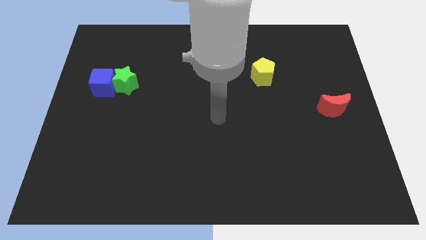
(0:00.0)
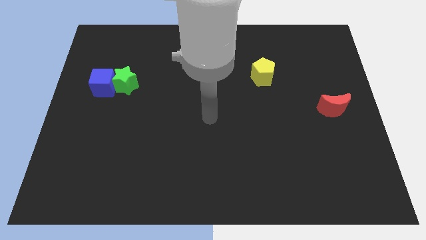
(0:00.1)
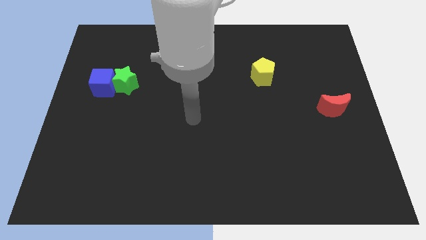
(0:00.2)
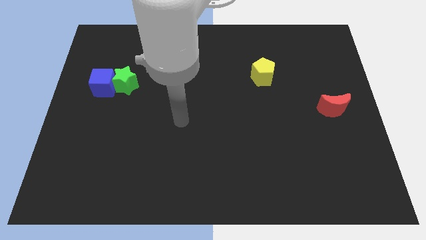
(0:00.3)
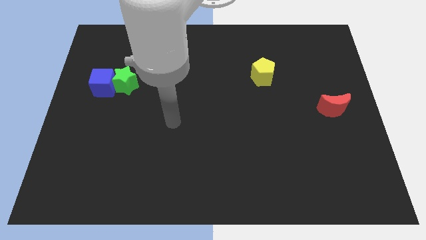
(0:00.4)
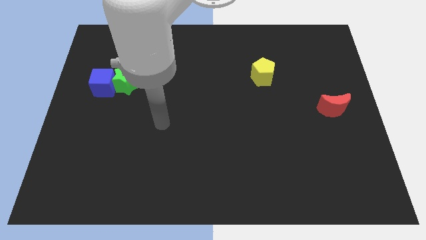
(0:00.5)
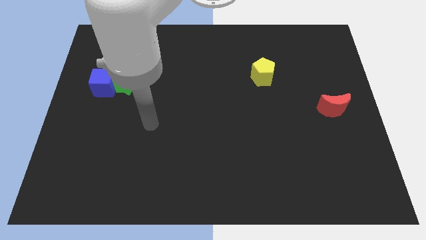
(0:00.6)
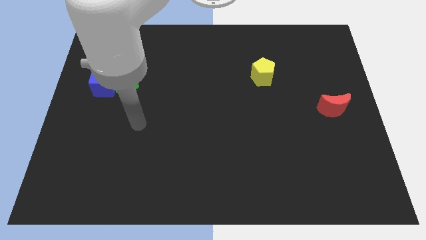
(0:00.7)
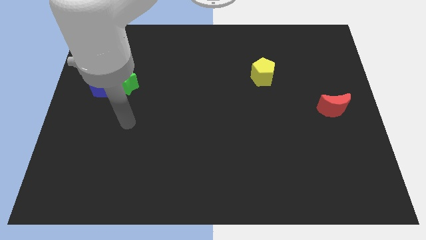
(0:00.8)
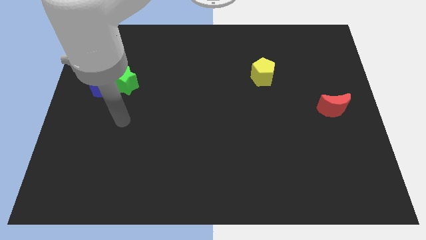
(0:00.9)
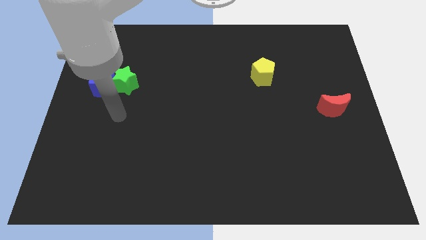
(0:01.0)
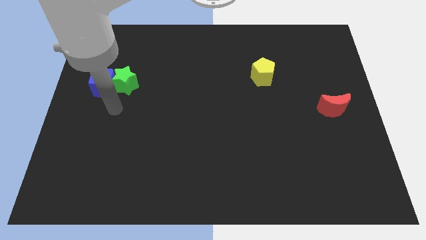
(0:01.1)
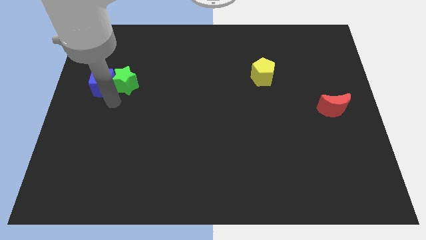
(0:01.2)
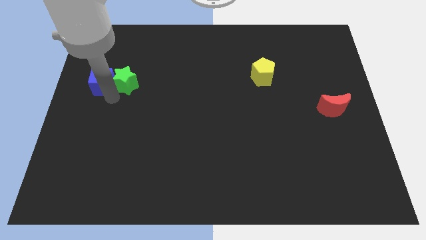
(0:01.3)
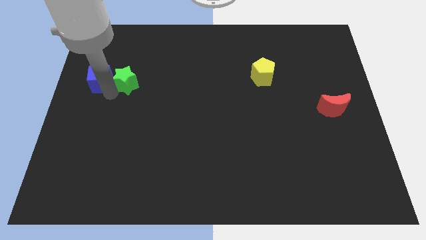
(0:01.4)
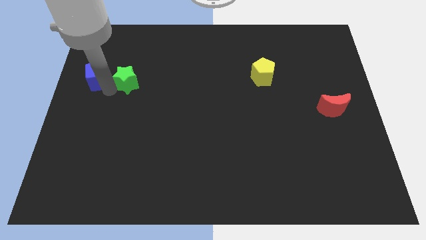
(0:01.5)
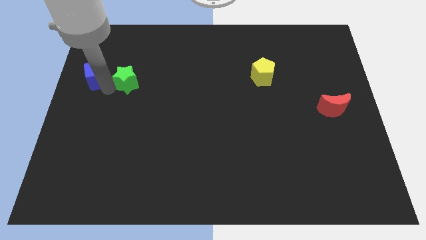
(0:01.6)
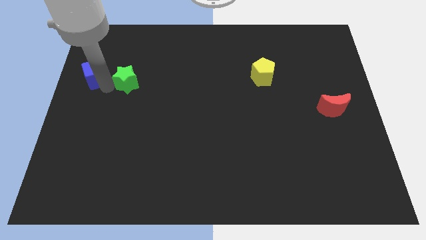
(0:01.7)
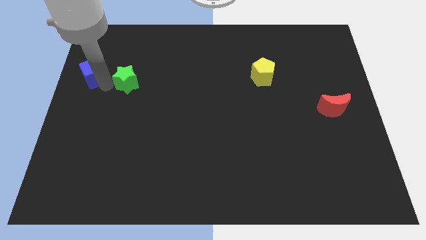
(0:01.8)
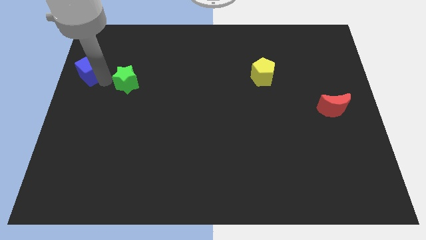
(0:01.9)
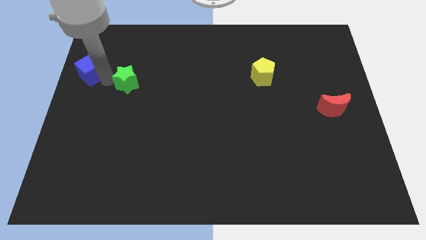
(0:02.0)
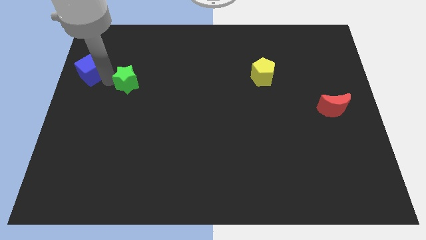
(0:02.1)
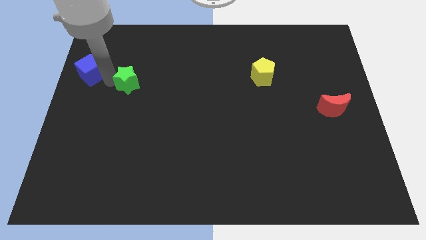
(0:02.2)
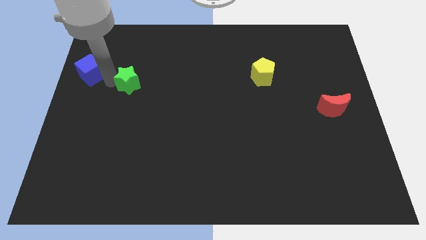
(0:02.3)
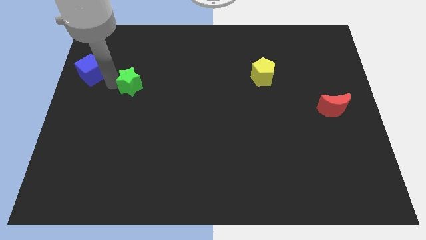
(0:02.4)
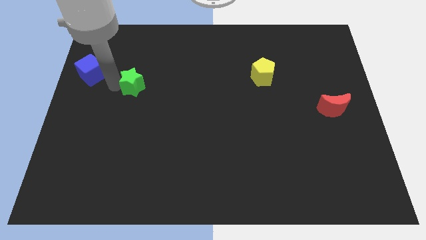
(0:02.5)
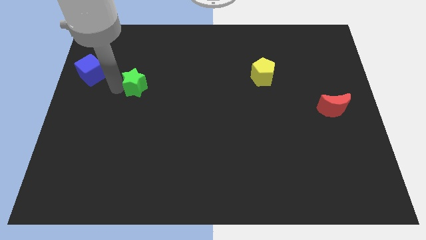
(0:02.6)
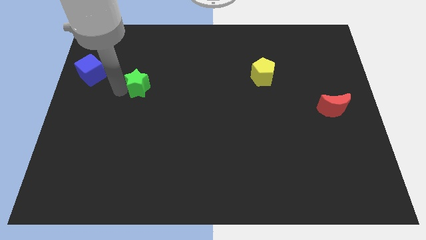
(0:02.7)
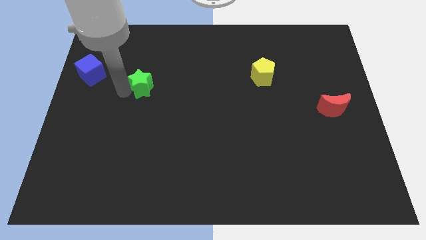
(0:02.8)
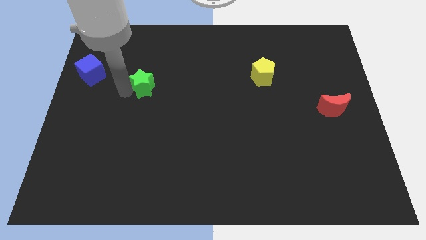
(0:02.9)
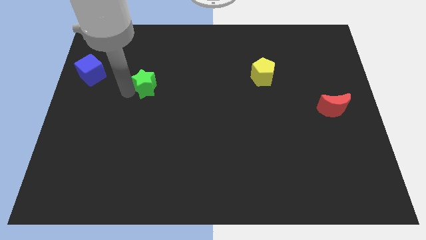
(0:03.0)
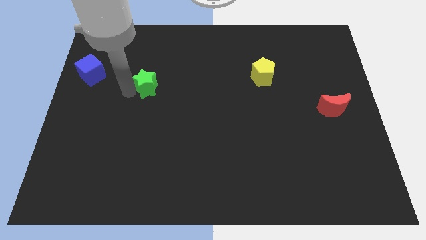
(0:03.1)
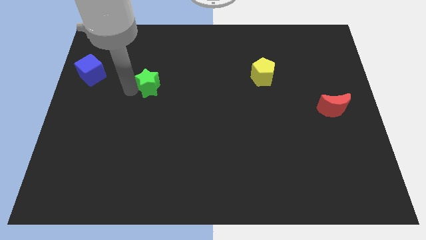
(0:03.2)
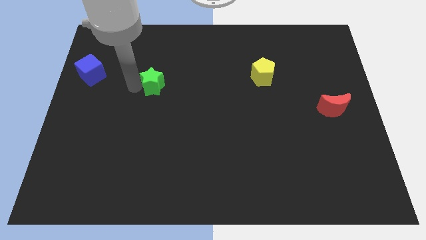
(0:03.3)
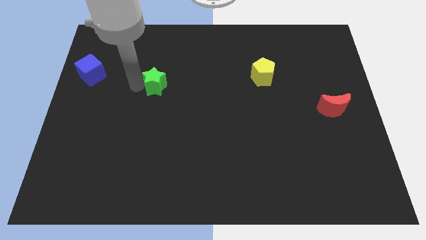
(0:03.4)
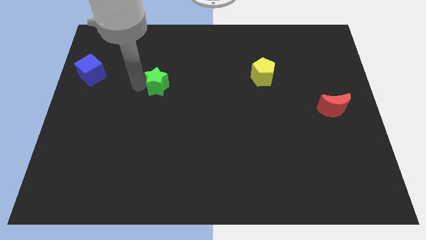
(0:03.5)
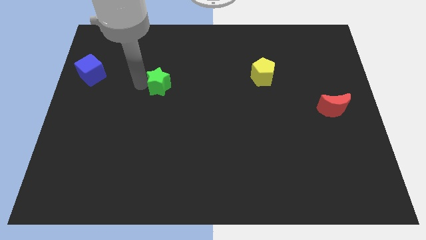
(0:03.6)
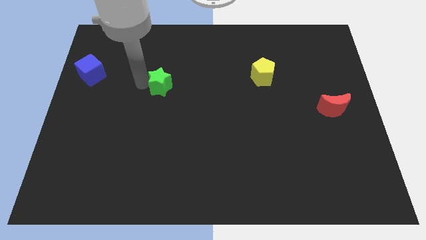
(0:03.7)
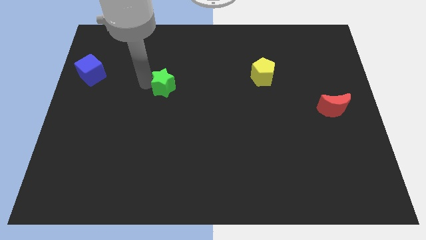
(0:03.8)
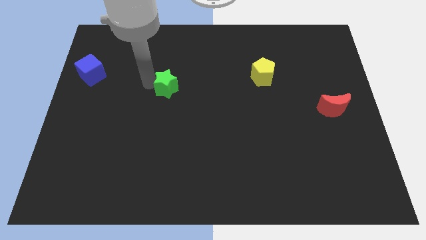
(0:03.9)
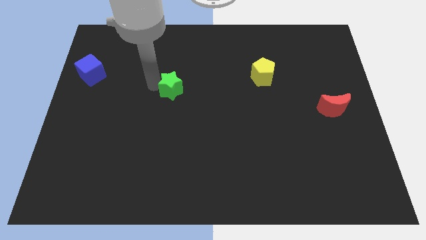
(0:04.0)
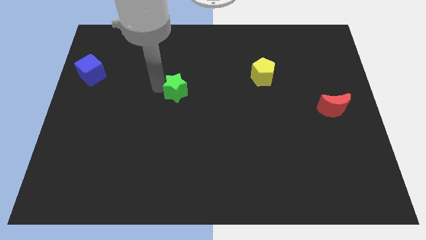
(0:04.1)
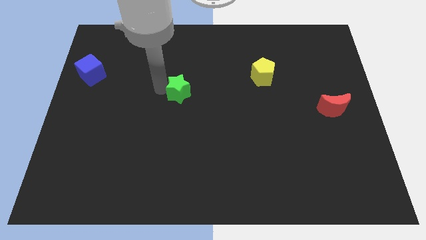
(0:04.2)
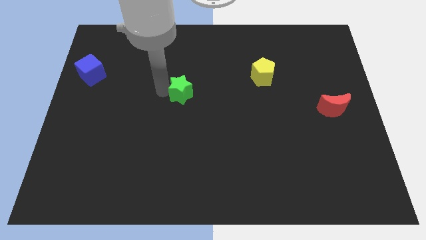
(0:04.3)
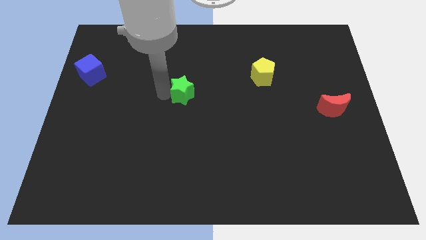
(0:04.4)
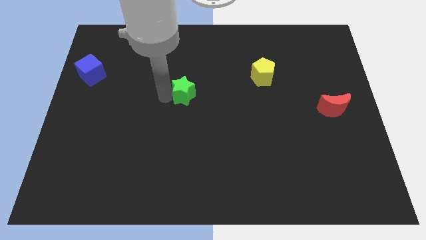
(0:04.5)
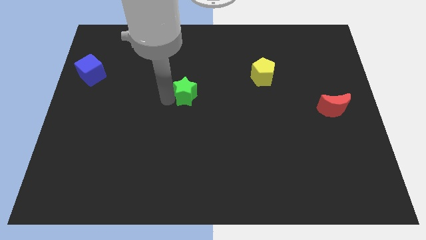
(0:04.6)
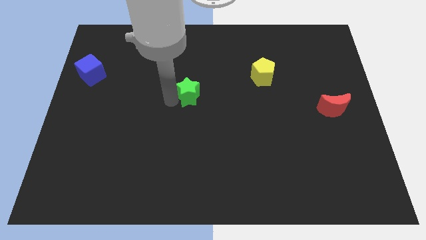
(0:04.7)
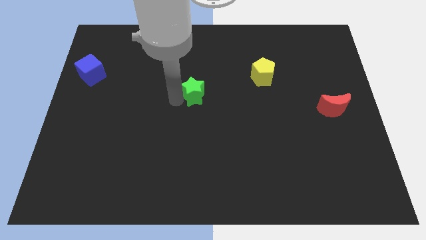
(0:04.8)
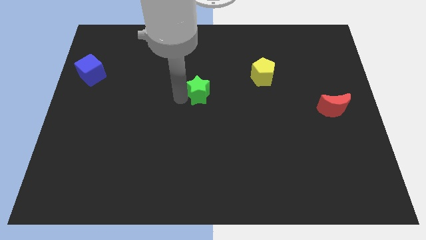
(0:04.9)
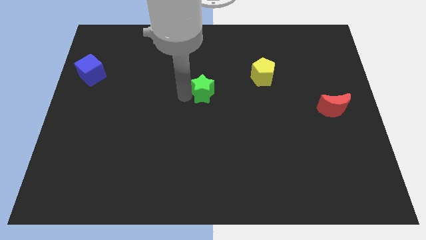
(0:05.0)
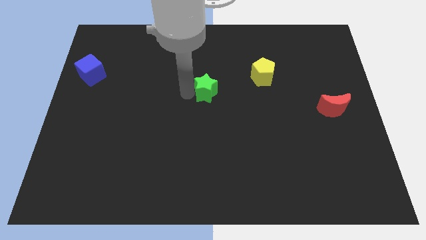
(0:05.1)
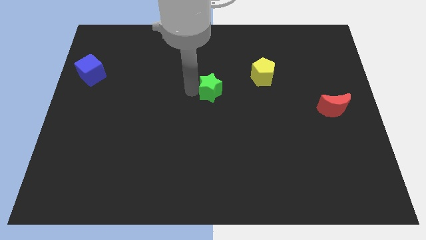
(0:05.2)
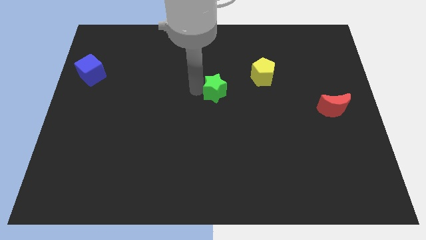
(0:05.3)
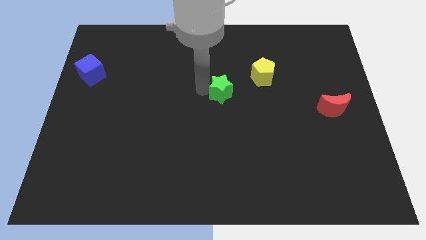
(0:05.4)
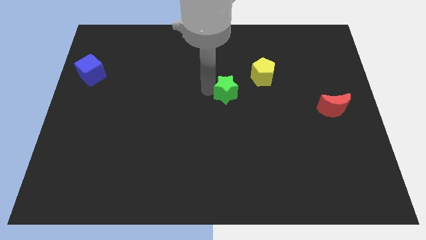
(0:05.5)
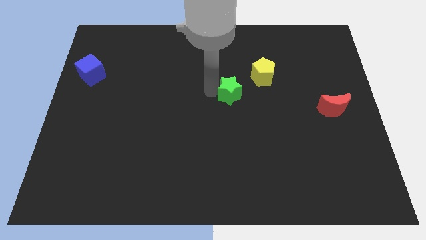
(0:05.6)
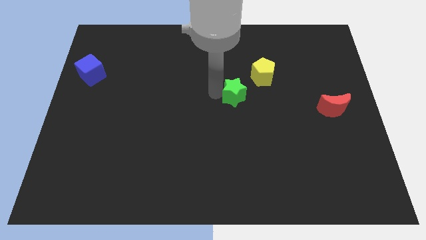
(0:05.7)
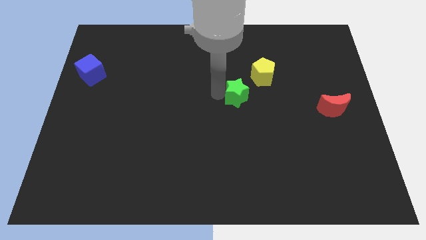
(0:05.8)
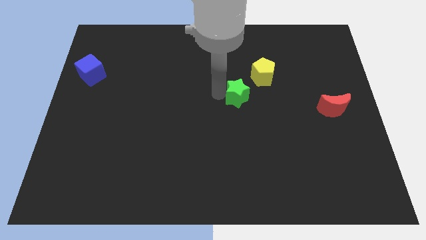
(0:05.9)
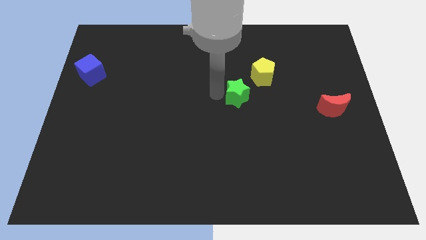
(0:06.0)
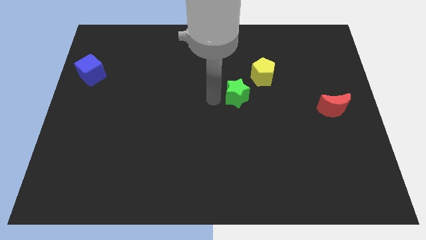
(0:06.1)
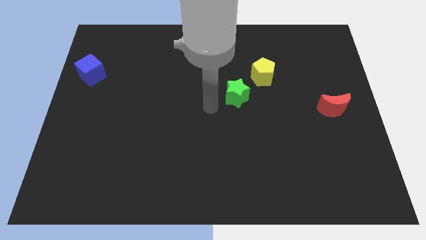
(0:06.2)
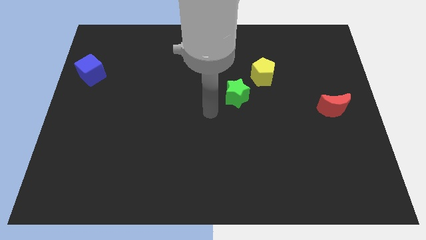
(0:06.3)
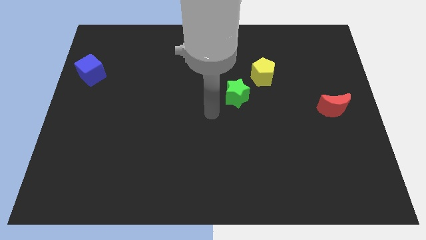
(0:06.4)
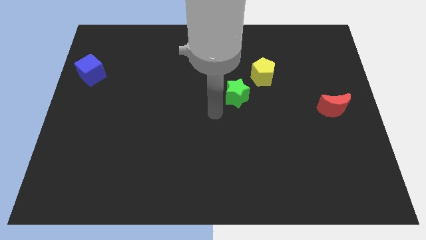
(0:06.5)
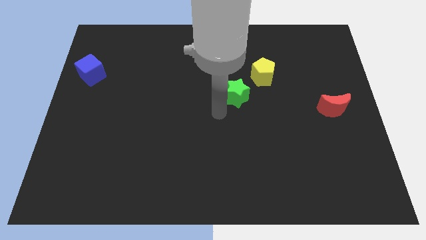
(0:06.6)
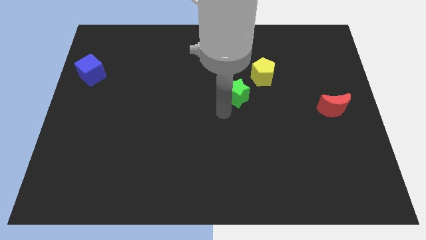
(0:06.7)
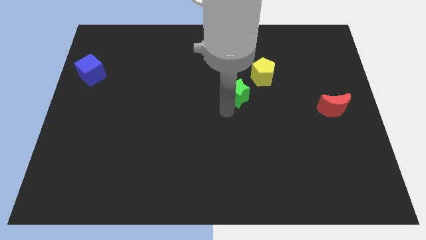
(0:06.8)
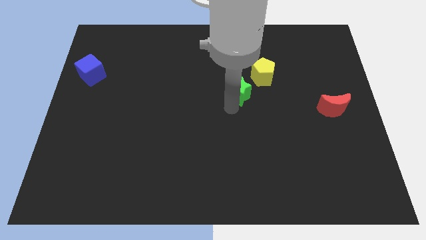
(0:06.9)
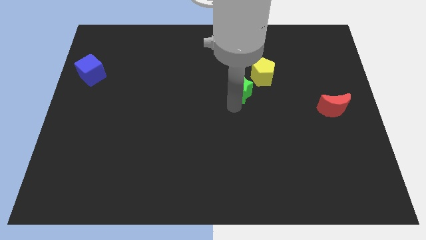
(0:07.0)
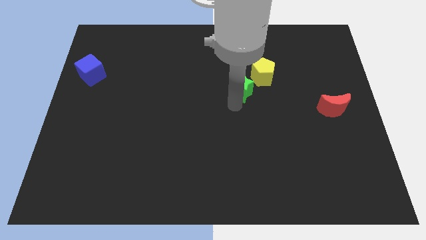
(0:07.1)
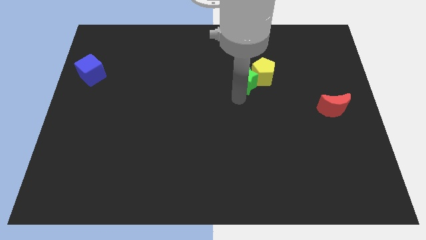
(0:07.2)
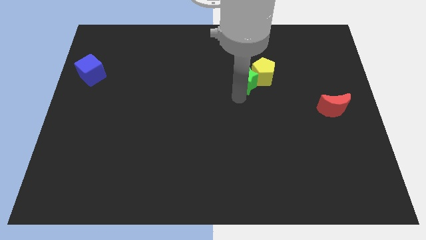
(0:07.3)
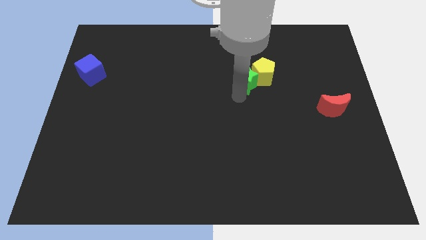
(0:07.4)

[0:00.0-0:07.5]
move the star to the yellow block

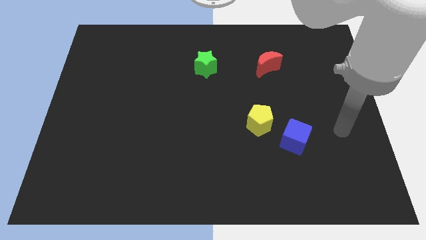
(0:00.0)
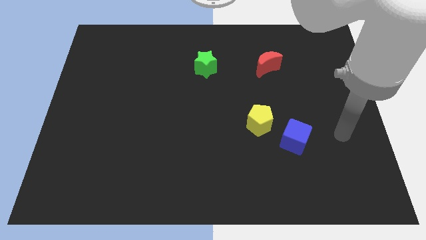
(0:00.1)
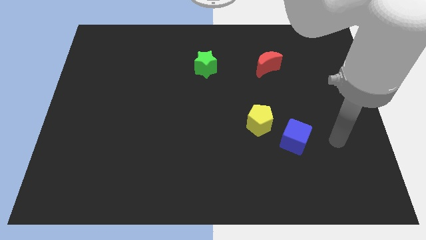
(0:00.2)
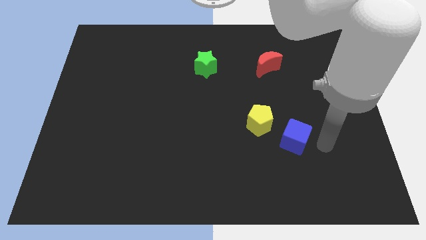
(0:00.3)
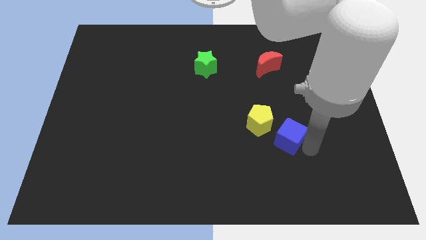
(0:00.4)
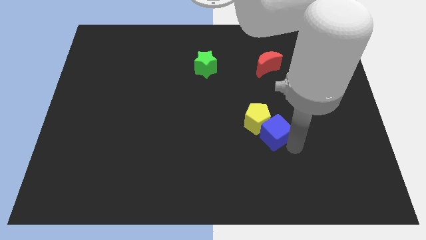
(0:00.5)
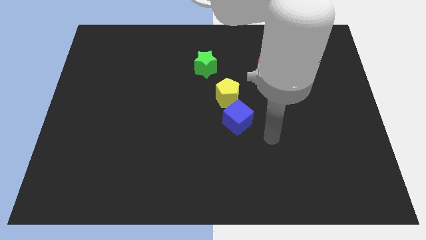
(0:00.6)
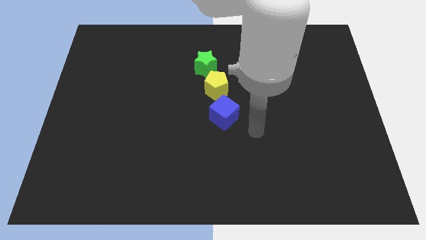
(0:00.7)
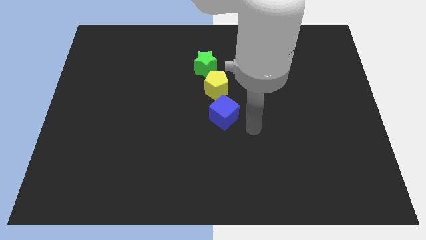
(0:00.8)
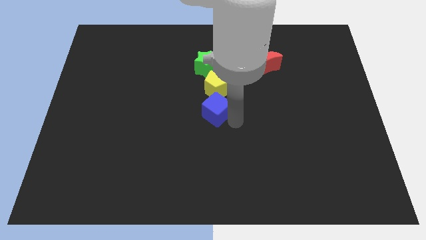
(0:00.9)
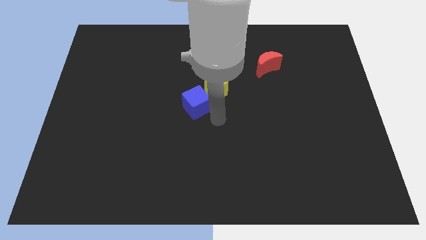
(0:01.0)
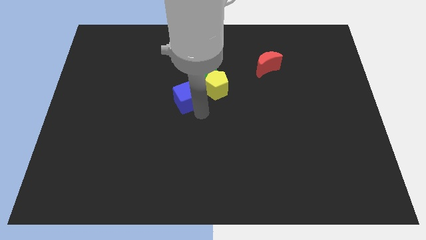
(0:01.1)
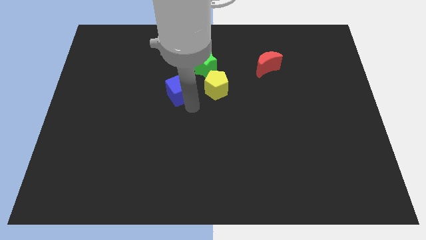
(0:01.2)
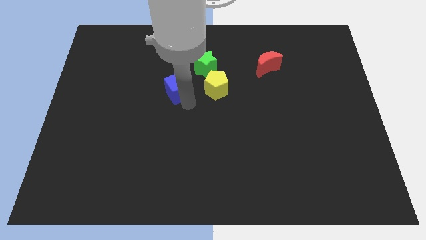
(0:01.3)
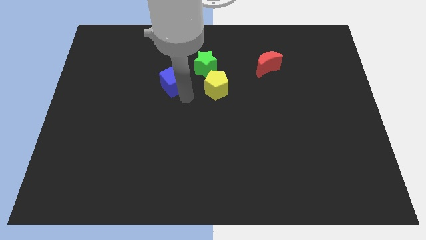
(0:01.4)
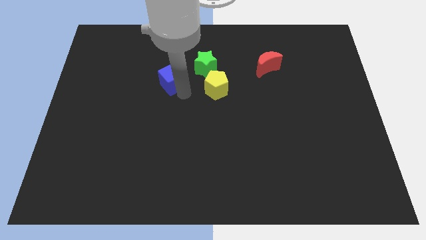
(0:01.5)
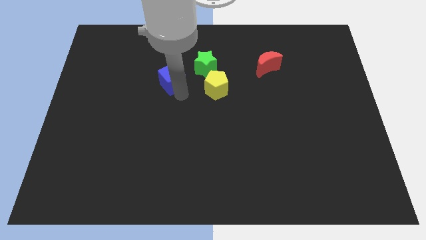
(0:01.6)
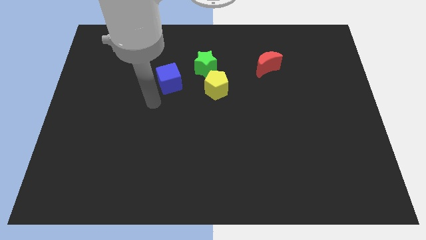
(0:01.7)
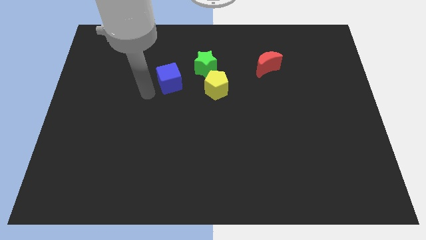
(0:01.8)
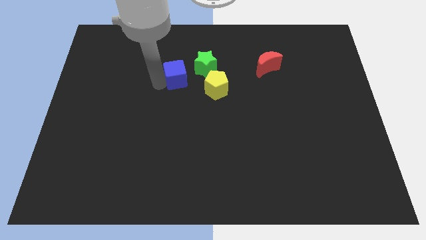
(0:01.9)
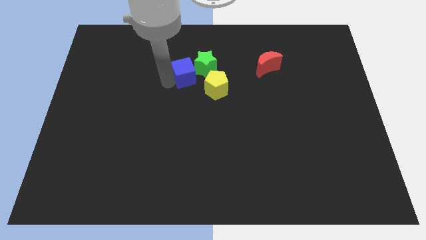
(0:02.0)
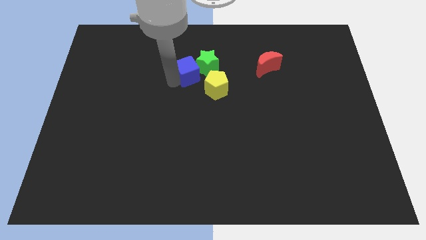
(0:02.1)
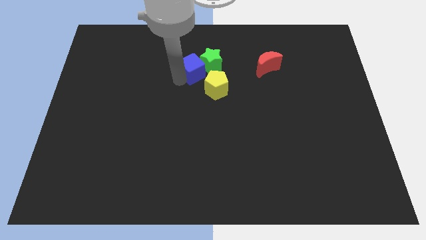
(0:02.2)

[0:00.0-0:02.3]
put the cube next to the green block
